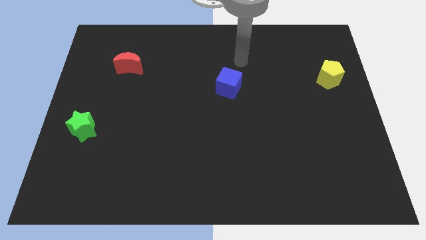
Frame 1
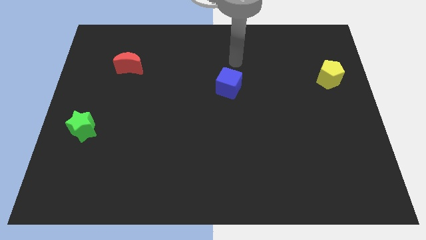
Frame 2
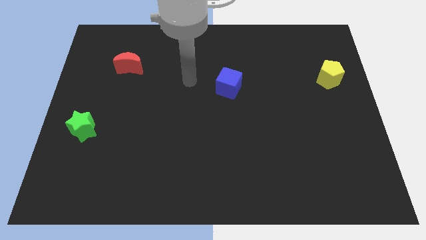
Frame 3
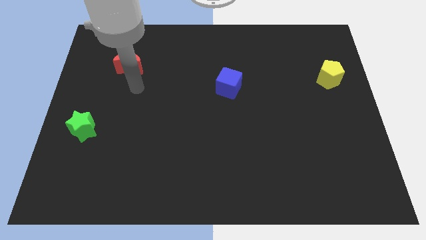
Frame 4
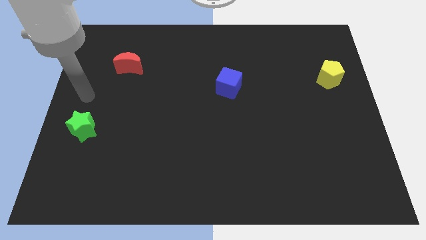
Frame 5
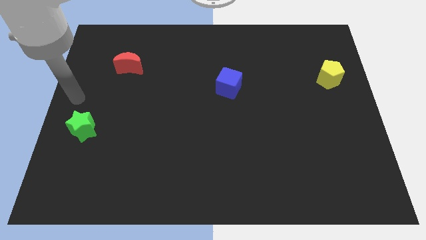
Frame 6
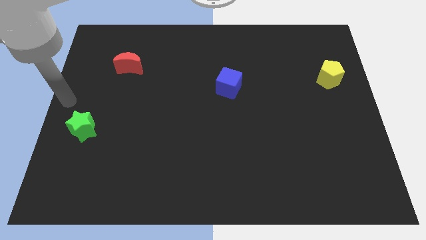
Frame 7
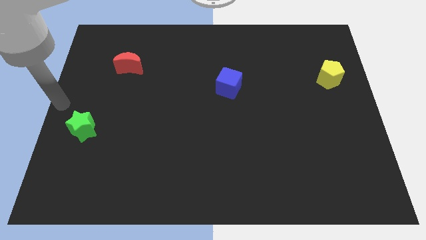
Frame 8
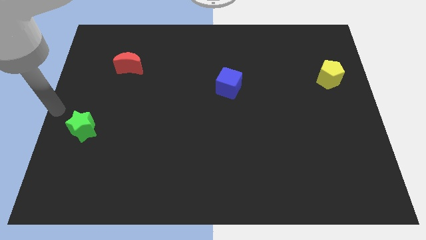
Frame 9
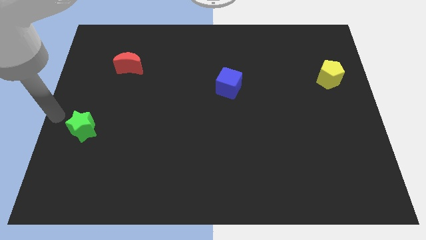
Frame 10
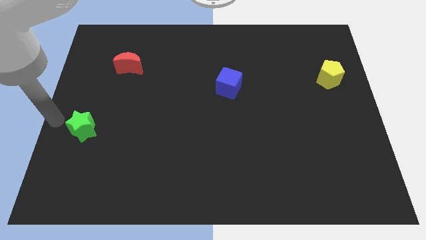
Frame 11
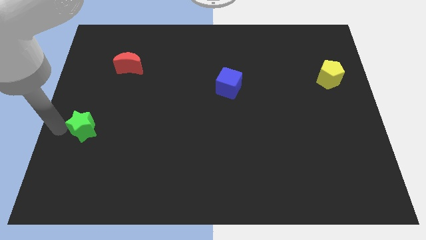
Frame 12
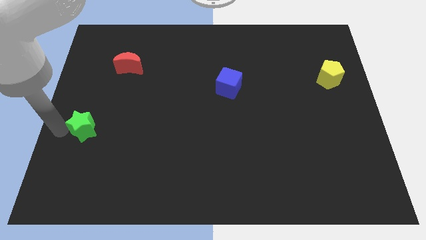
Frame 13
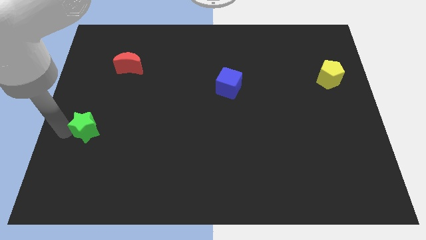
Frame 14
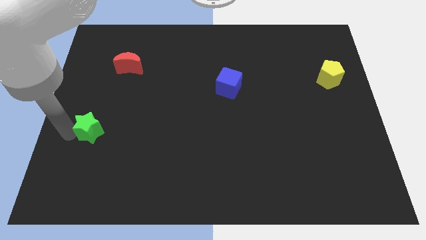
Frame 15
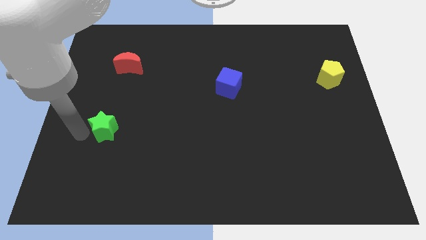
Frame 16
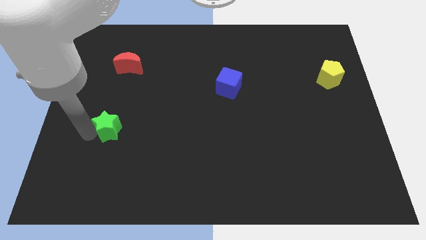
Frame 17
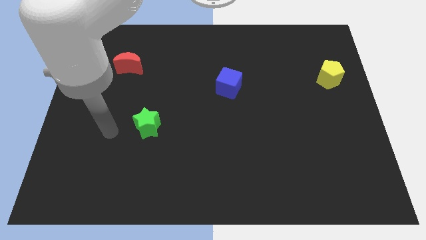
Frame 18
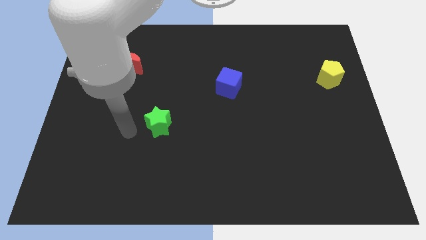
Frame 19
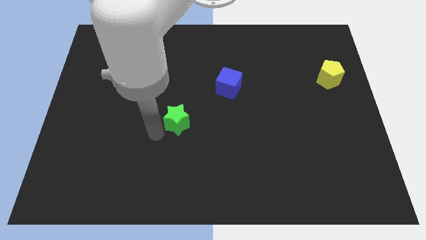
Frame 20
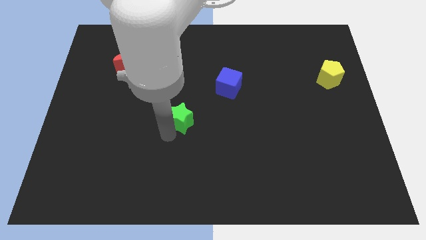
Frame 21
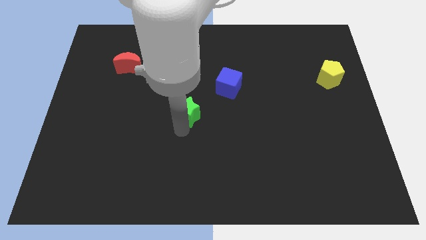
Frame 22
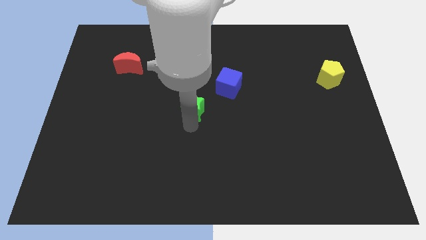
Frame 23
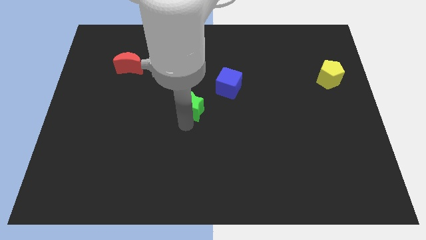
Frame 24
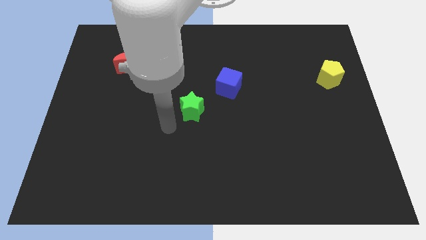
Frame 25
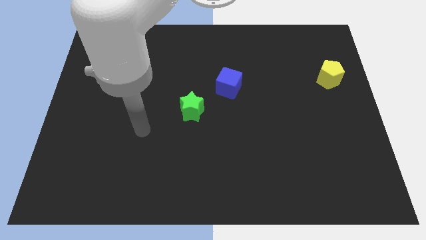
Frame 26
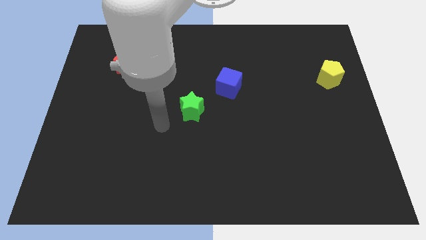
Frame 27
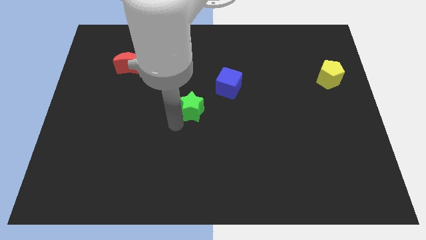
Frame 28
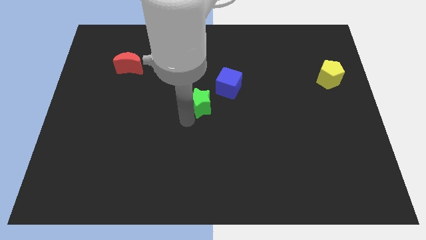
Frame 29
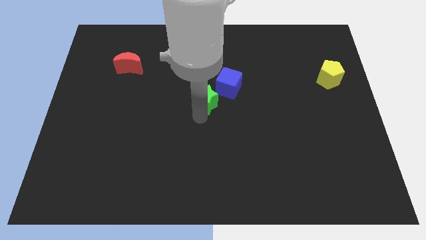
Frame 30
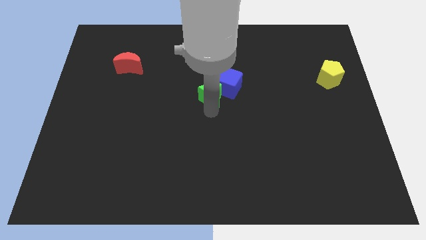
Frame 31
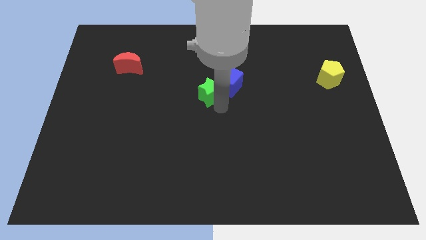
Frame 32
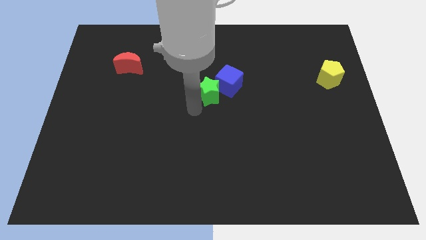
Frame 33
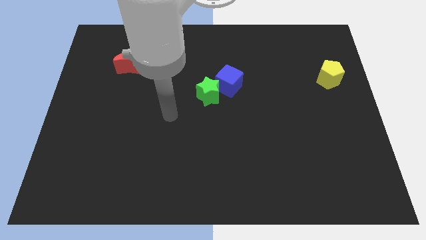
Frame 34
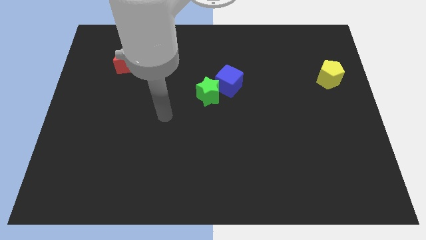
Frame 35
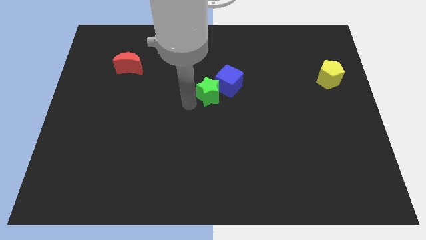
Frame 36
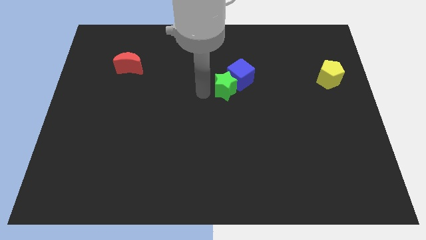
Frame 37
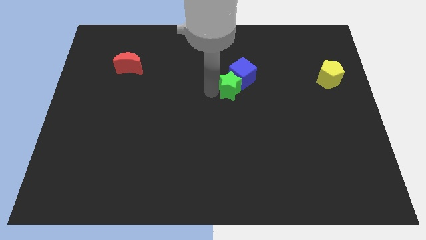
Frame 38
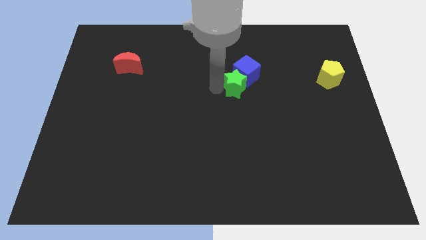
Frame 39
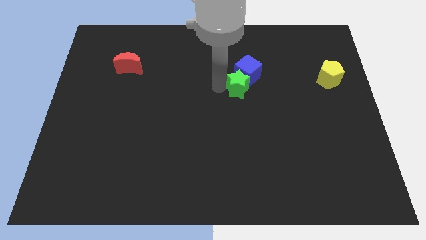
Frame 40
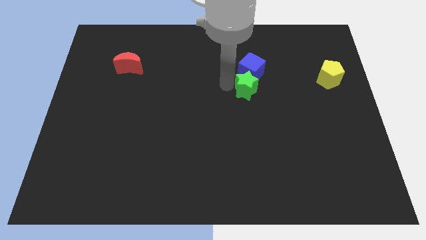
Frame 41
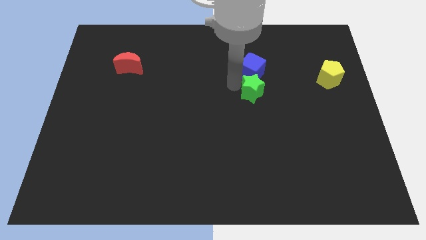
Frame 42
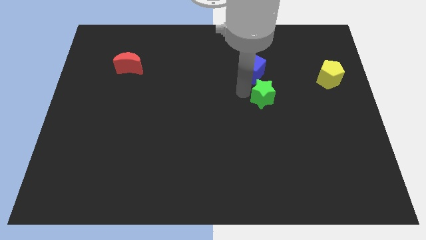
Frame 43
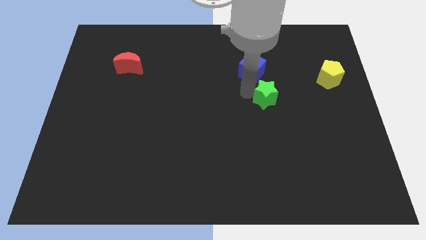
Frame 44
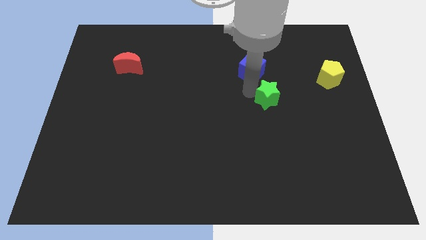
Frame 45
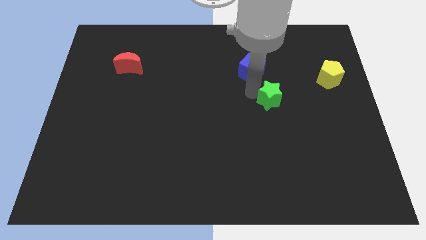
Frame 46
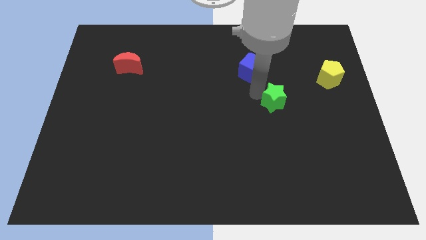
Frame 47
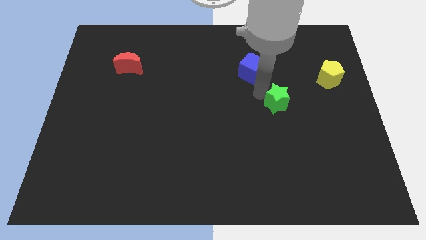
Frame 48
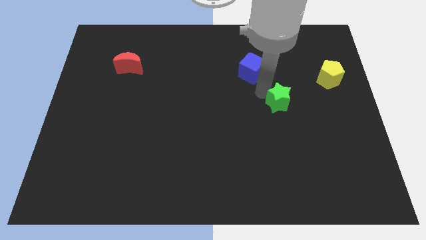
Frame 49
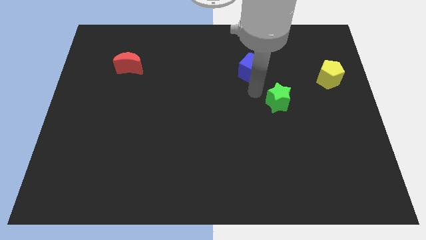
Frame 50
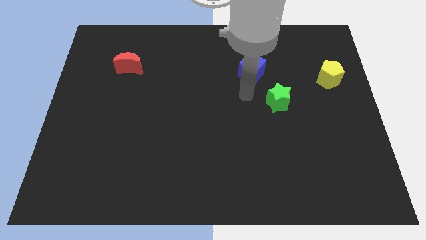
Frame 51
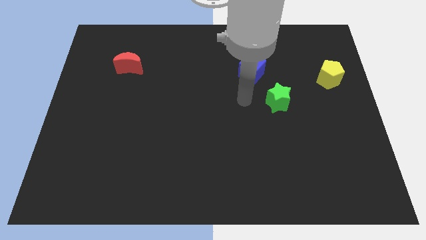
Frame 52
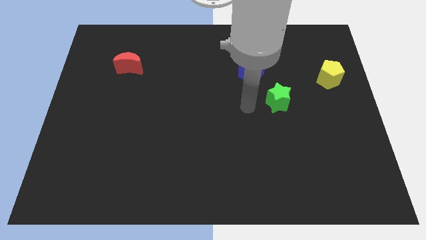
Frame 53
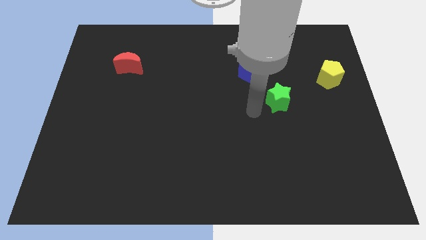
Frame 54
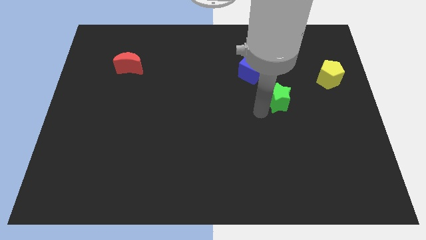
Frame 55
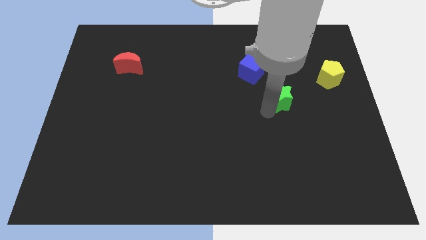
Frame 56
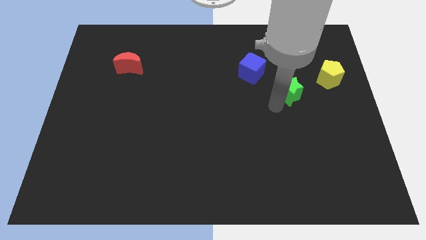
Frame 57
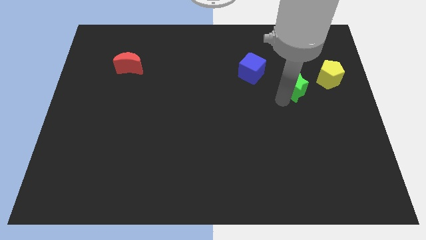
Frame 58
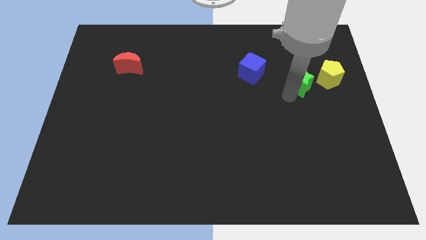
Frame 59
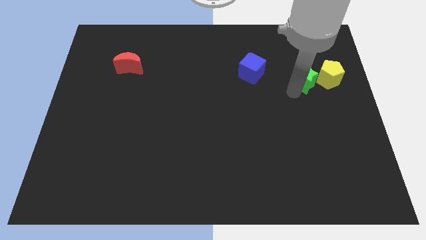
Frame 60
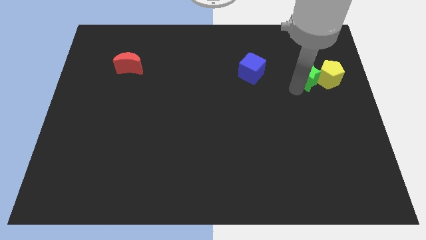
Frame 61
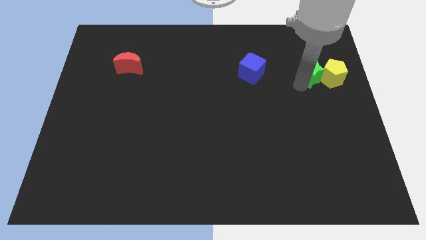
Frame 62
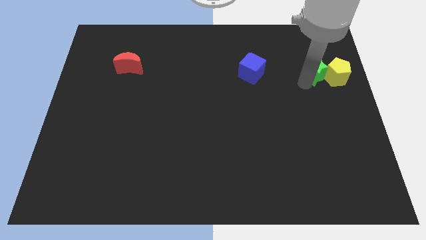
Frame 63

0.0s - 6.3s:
put the star close to the yellow pentagon

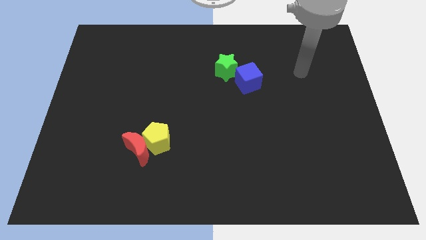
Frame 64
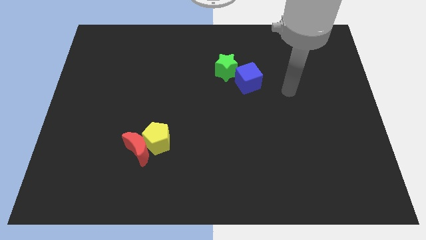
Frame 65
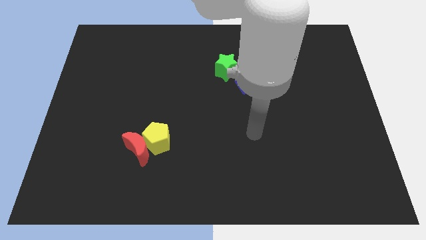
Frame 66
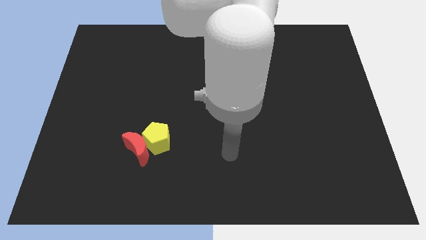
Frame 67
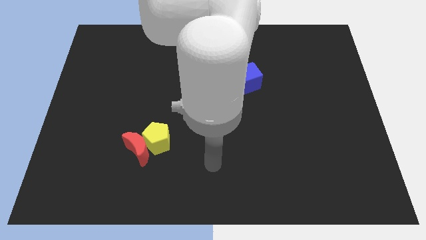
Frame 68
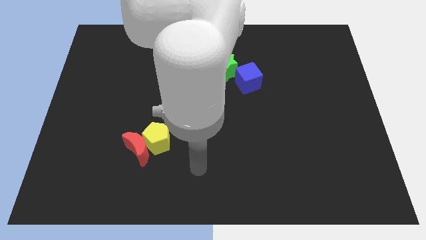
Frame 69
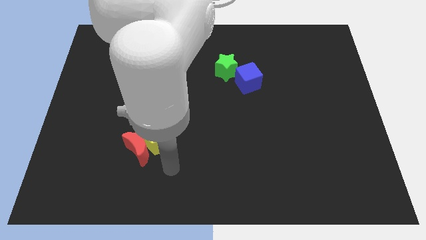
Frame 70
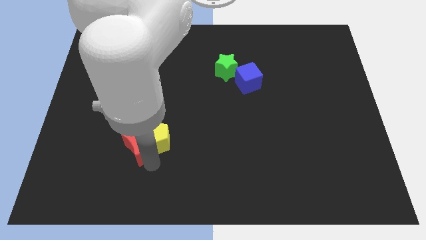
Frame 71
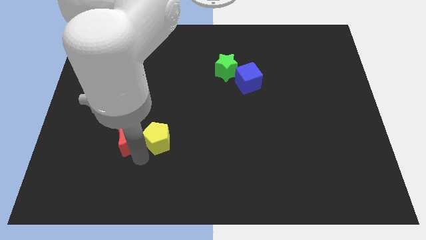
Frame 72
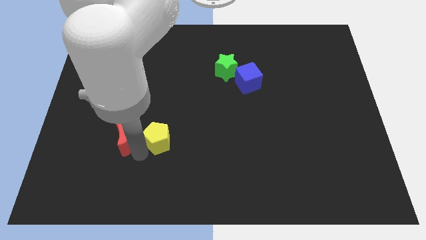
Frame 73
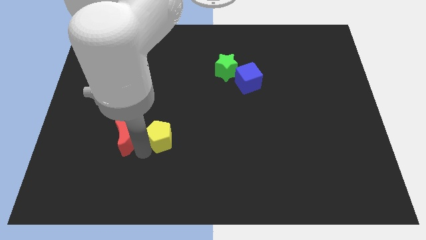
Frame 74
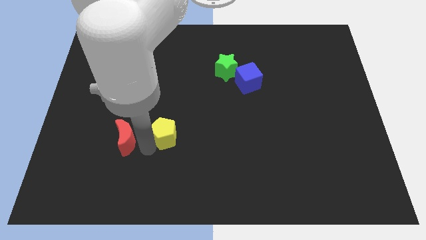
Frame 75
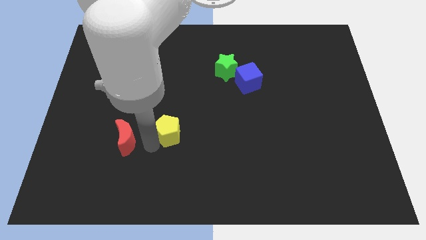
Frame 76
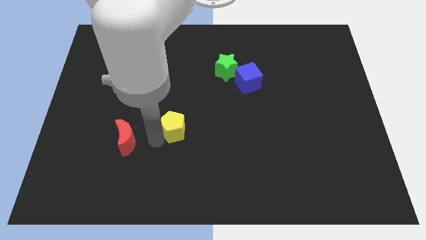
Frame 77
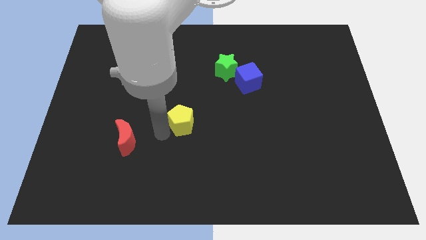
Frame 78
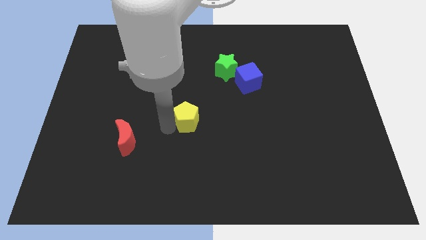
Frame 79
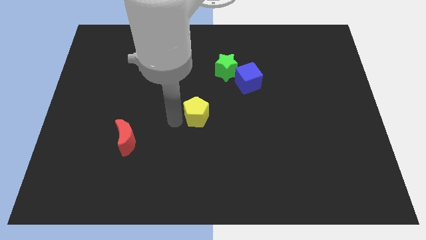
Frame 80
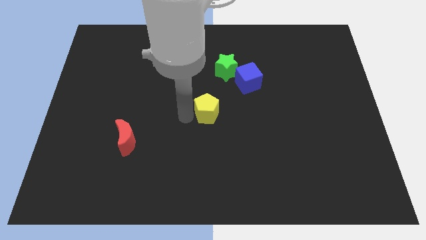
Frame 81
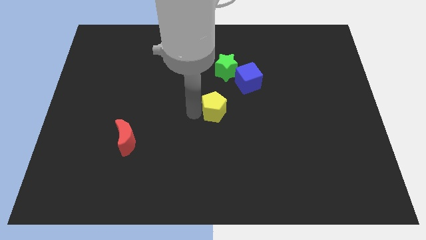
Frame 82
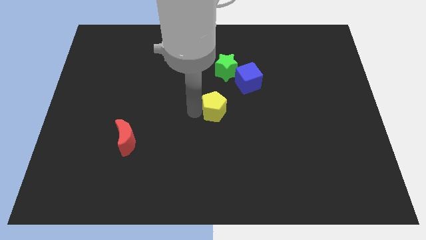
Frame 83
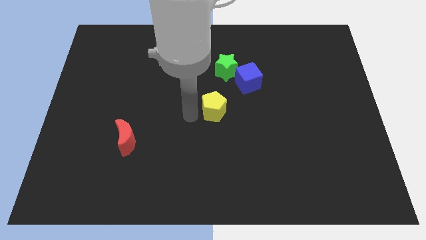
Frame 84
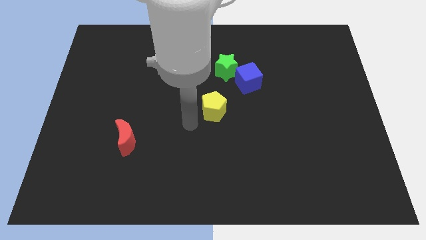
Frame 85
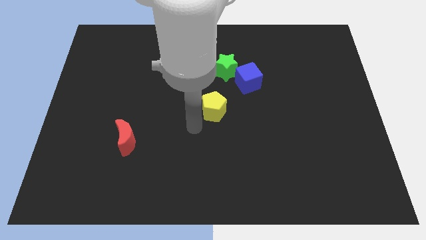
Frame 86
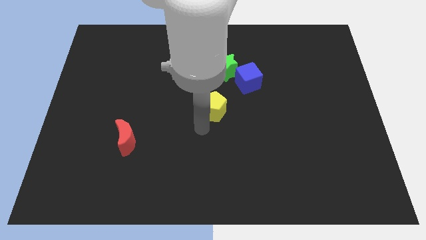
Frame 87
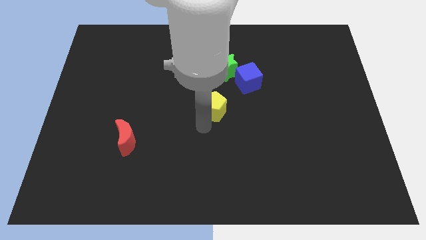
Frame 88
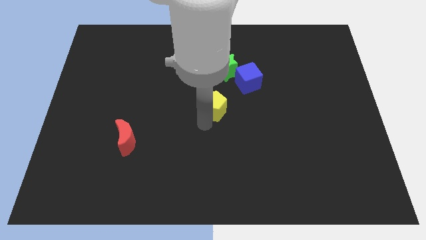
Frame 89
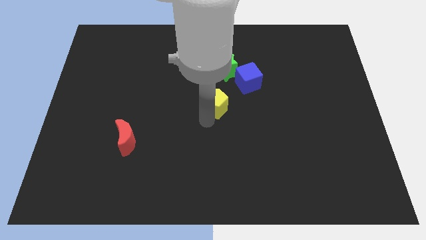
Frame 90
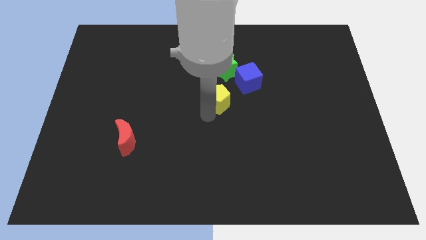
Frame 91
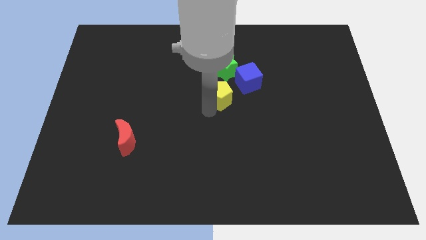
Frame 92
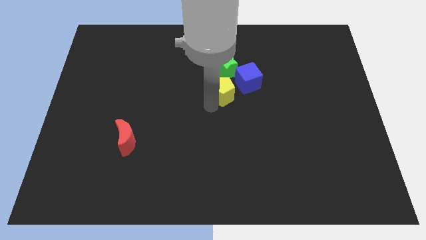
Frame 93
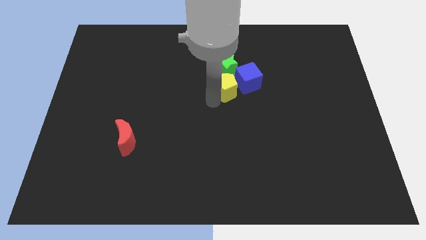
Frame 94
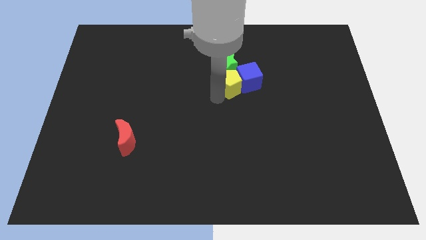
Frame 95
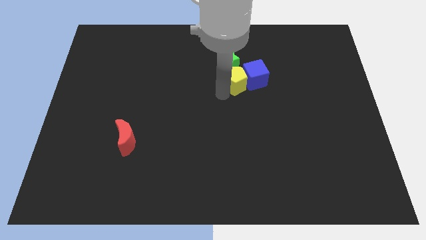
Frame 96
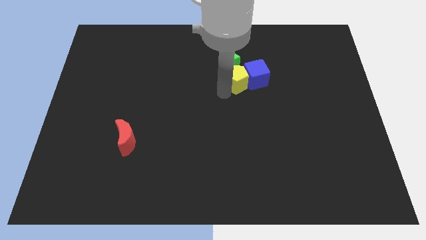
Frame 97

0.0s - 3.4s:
slide the yellow block towards the green block
